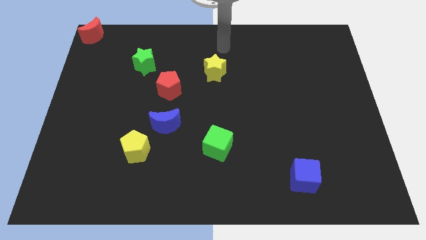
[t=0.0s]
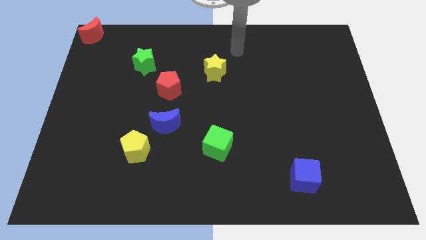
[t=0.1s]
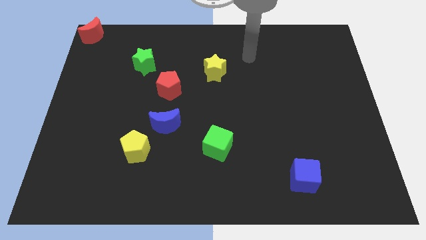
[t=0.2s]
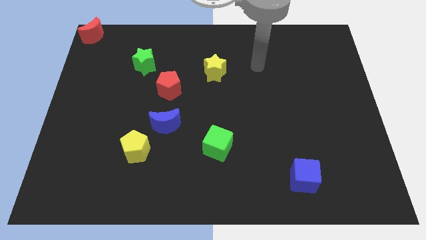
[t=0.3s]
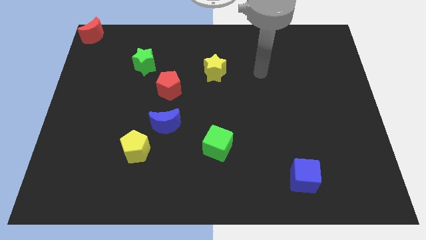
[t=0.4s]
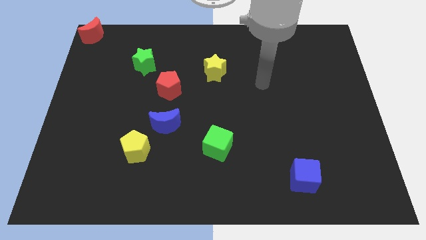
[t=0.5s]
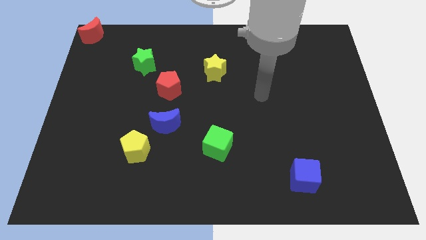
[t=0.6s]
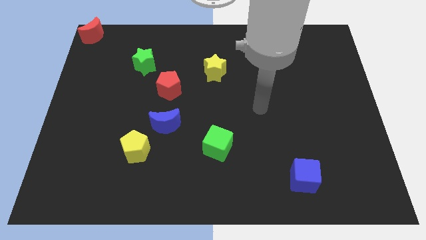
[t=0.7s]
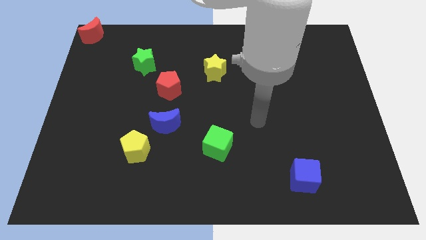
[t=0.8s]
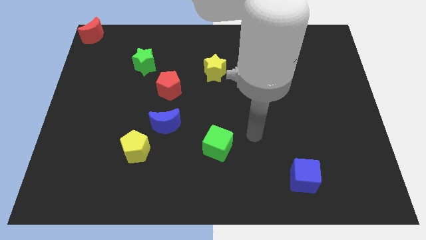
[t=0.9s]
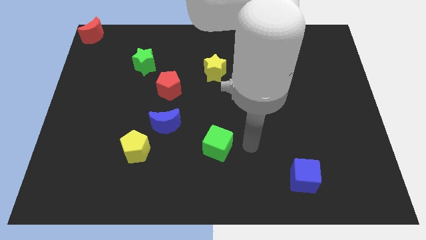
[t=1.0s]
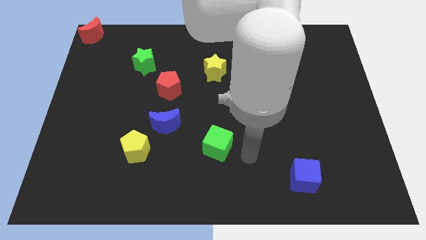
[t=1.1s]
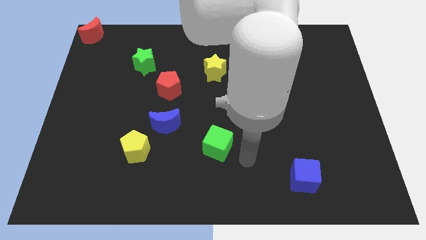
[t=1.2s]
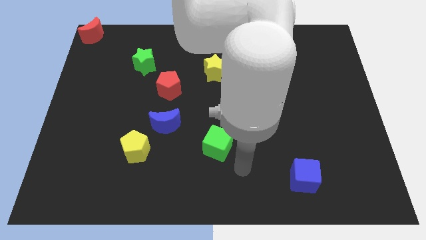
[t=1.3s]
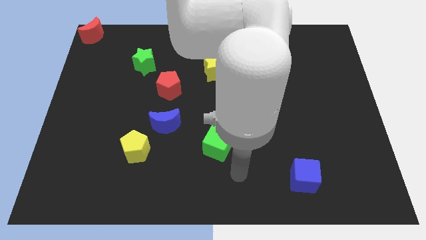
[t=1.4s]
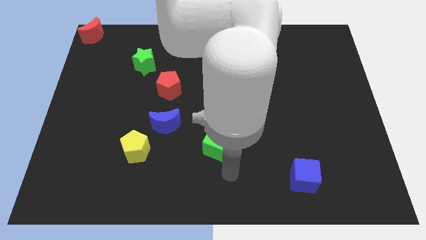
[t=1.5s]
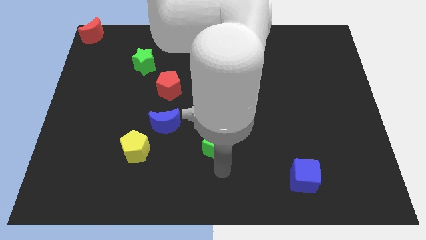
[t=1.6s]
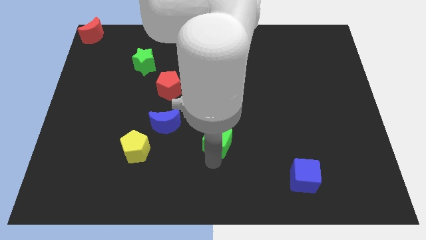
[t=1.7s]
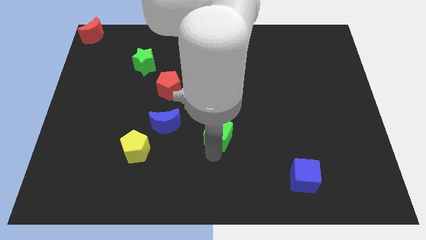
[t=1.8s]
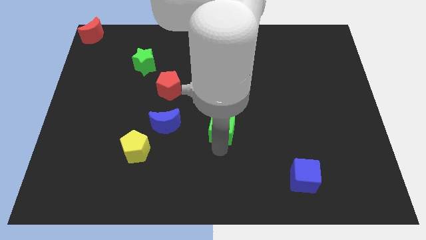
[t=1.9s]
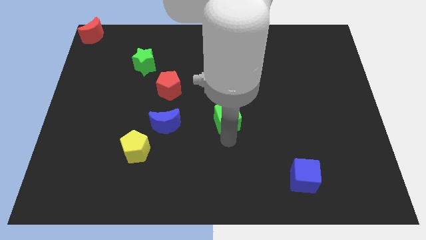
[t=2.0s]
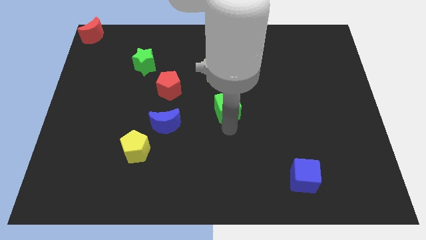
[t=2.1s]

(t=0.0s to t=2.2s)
move the green cube to the right side of the blue moon

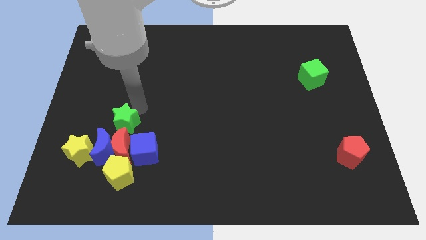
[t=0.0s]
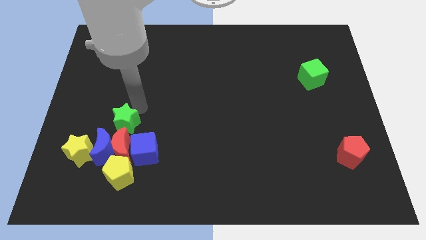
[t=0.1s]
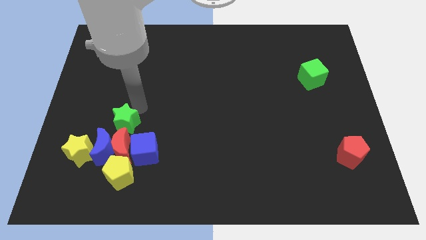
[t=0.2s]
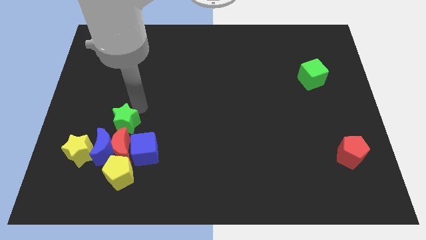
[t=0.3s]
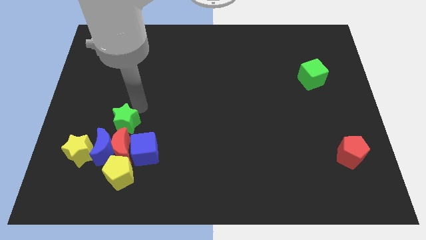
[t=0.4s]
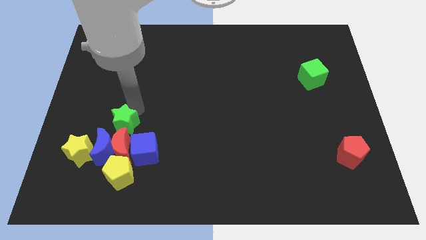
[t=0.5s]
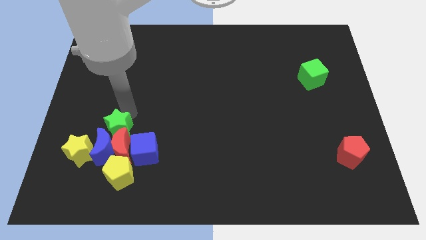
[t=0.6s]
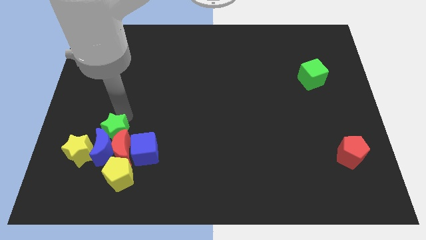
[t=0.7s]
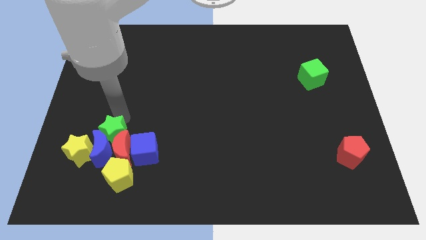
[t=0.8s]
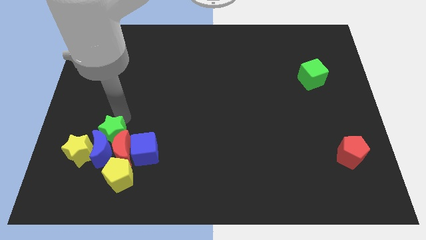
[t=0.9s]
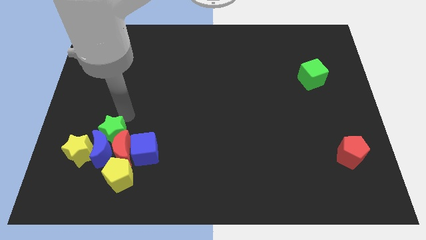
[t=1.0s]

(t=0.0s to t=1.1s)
push green star into blue moon

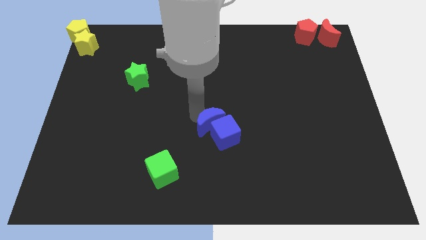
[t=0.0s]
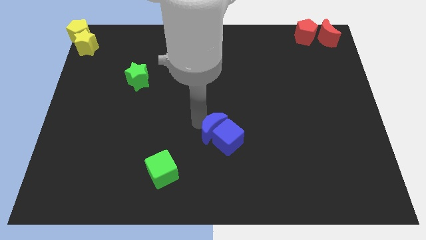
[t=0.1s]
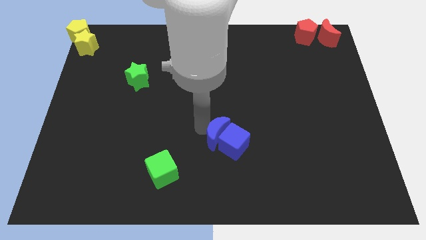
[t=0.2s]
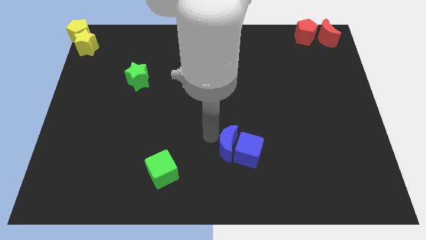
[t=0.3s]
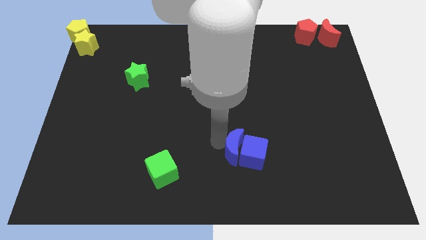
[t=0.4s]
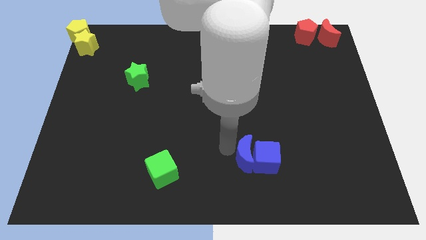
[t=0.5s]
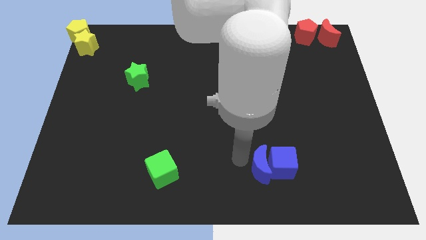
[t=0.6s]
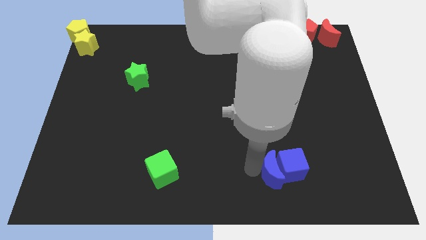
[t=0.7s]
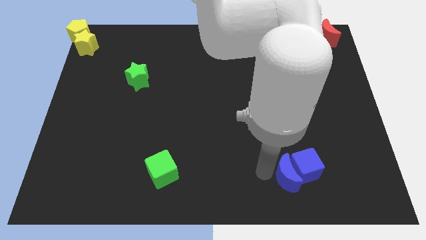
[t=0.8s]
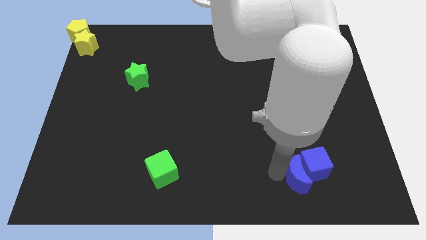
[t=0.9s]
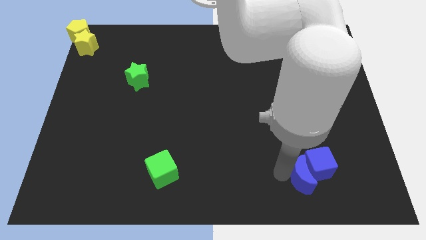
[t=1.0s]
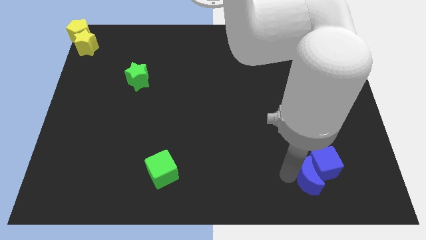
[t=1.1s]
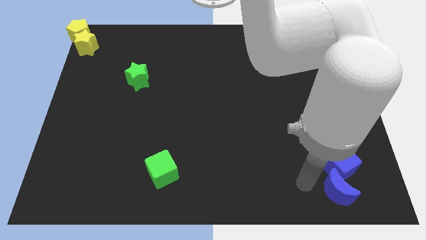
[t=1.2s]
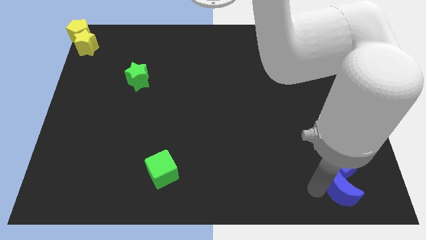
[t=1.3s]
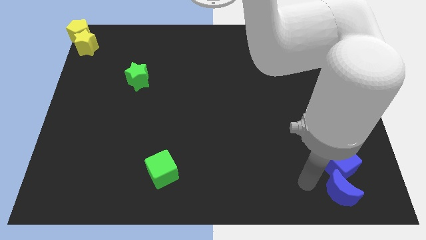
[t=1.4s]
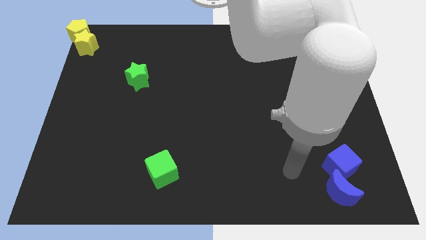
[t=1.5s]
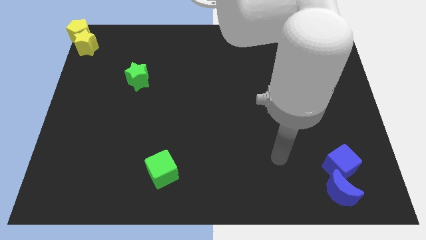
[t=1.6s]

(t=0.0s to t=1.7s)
place the two blue blocks to the bottom right corner

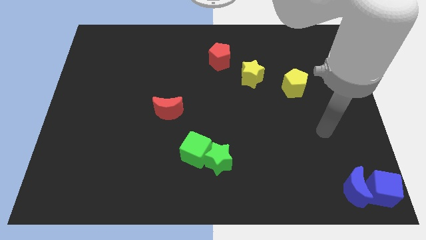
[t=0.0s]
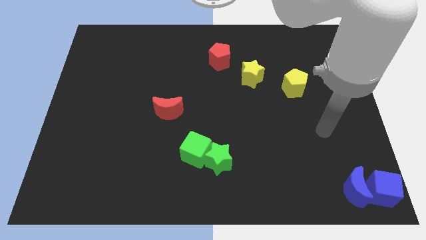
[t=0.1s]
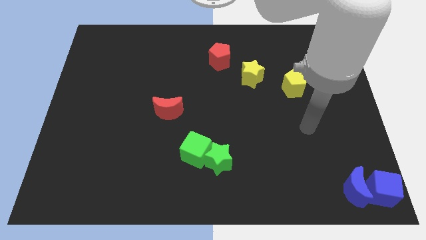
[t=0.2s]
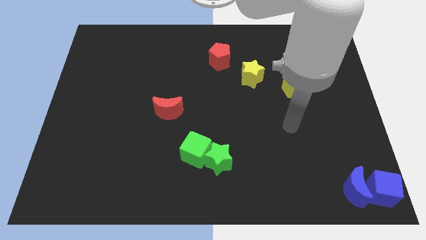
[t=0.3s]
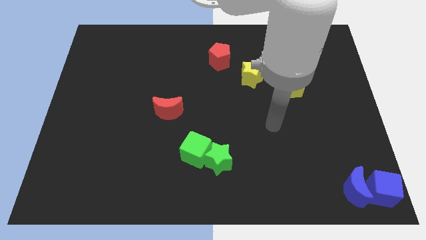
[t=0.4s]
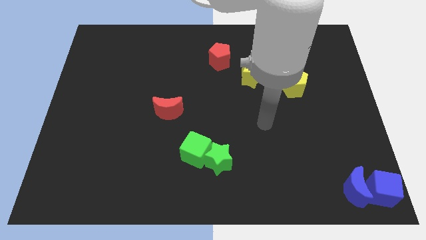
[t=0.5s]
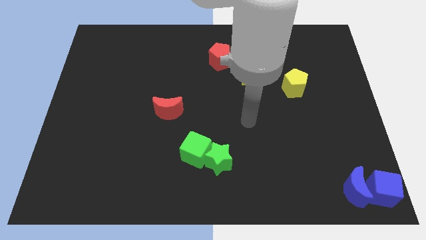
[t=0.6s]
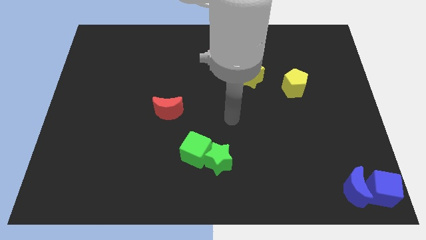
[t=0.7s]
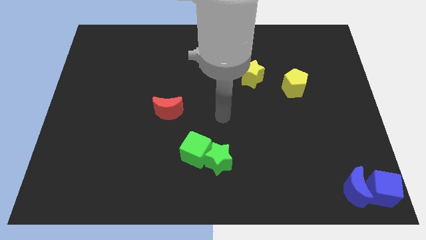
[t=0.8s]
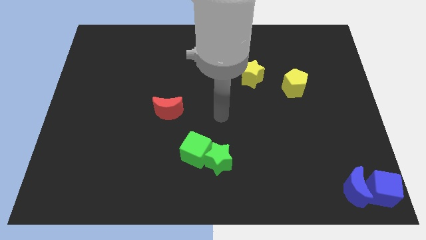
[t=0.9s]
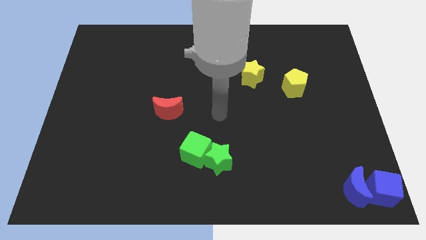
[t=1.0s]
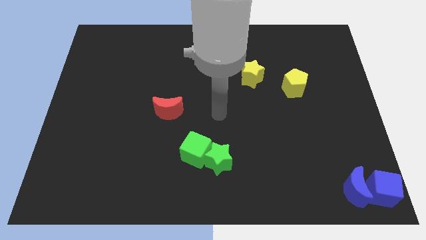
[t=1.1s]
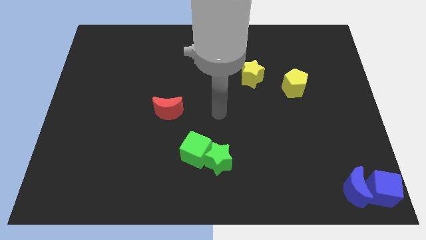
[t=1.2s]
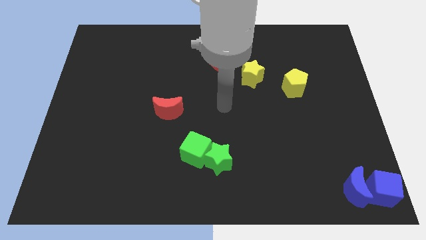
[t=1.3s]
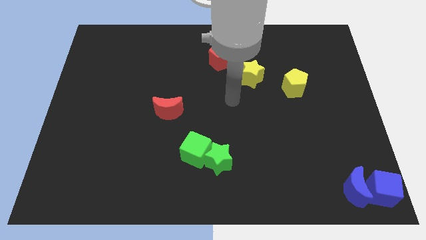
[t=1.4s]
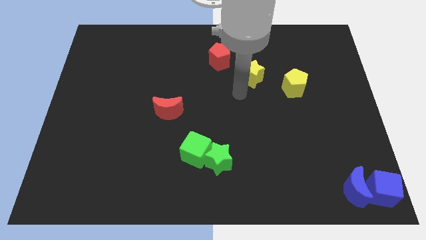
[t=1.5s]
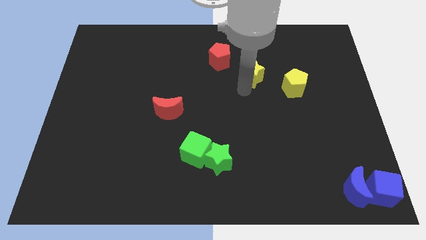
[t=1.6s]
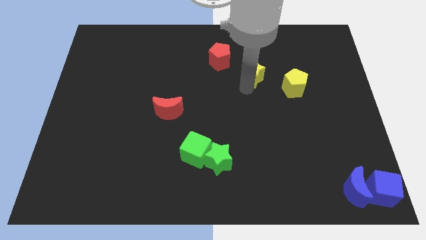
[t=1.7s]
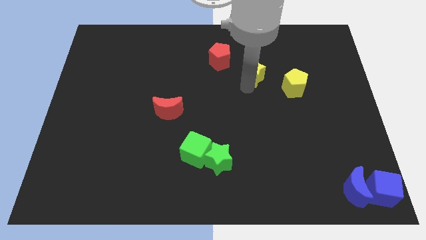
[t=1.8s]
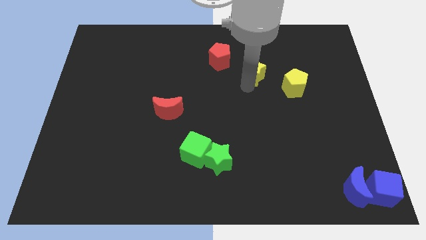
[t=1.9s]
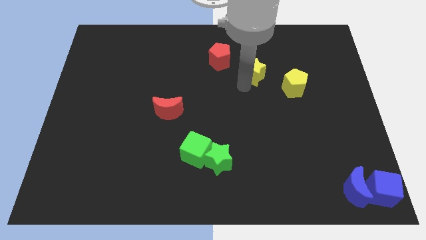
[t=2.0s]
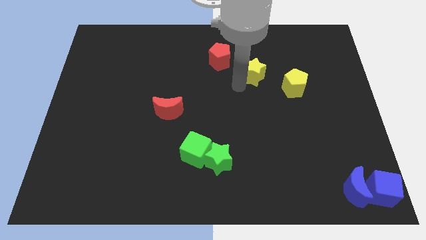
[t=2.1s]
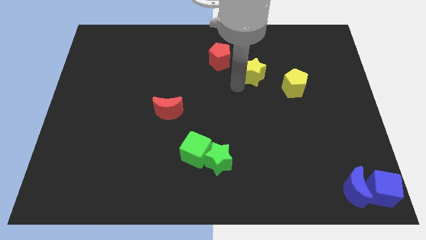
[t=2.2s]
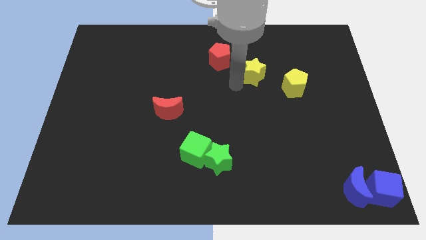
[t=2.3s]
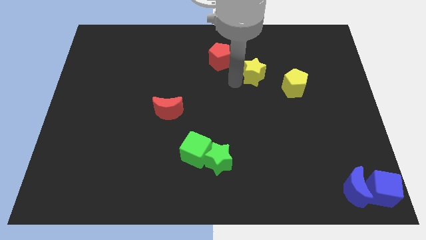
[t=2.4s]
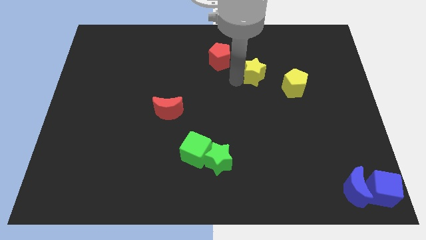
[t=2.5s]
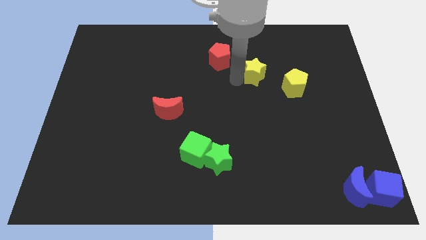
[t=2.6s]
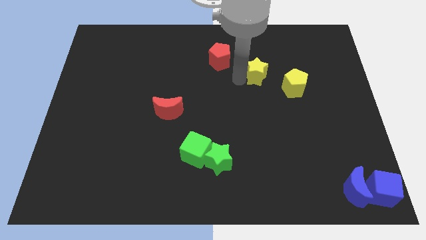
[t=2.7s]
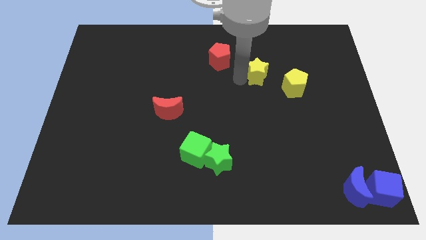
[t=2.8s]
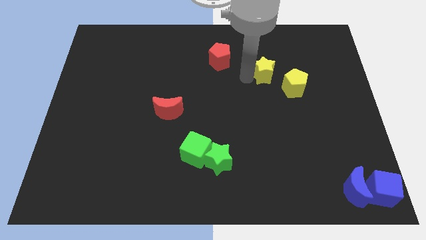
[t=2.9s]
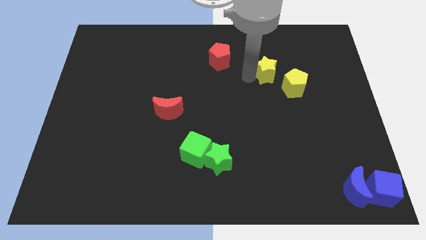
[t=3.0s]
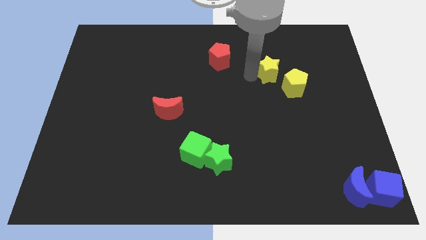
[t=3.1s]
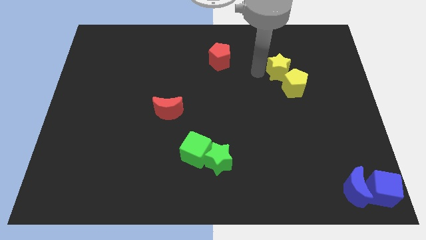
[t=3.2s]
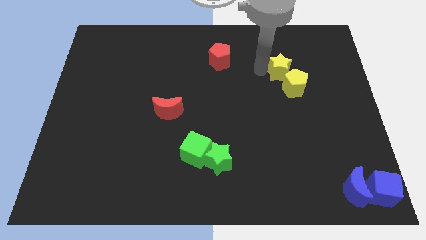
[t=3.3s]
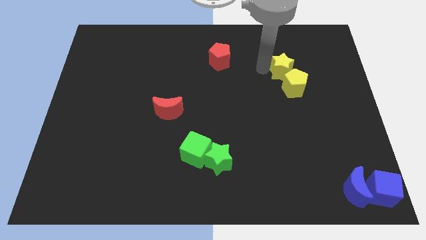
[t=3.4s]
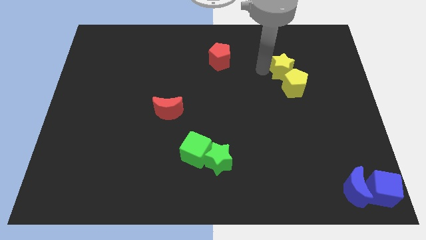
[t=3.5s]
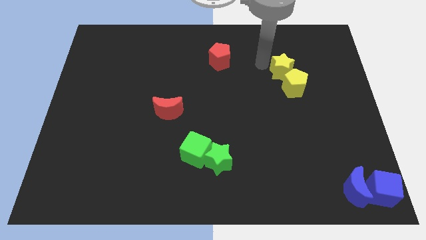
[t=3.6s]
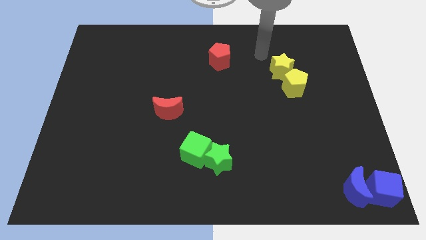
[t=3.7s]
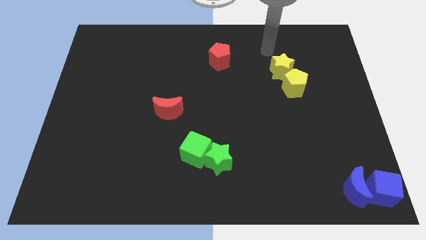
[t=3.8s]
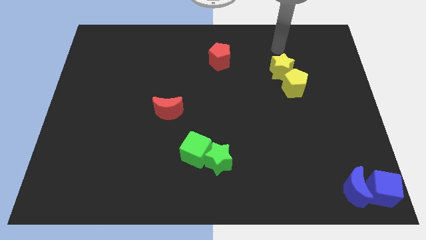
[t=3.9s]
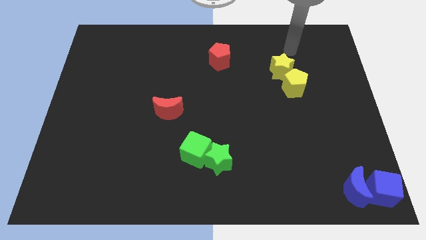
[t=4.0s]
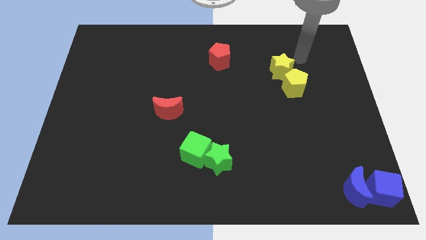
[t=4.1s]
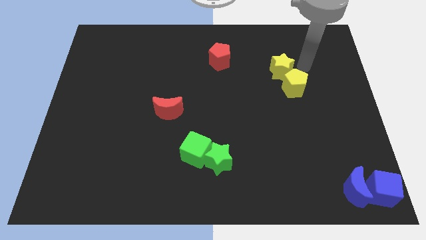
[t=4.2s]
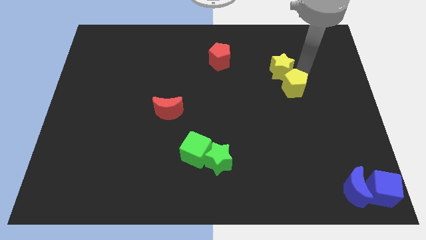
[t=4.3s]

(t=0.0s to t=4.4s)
place yellow star to the top of yellow pentagon
